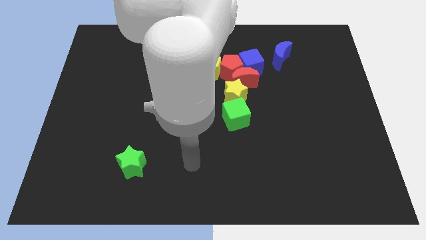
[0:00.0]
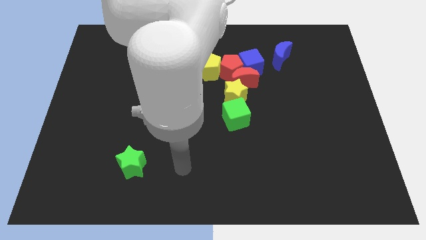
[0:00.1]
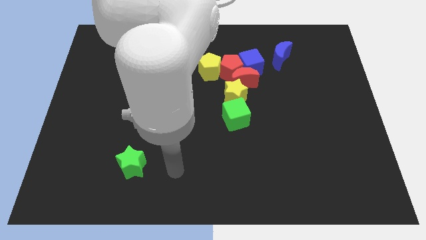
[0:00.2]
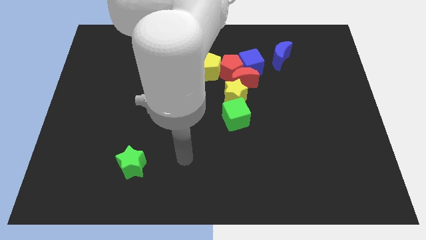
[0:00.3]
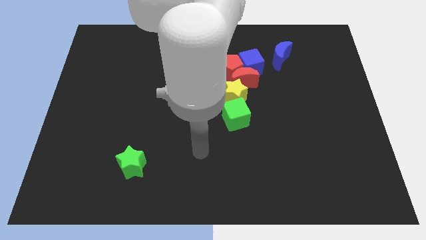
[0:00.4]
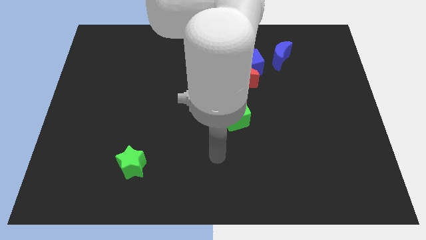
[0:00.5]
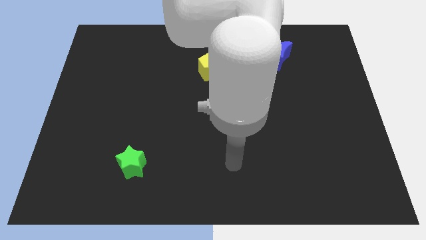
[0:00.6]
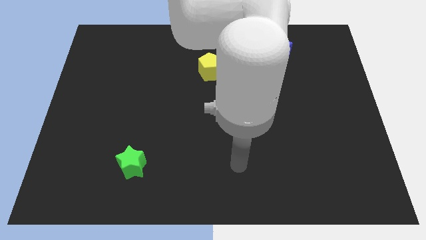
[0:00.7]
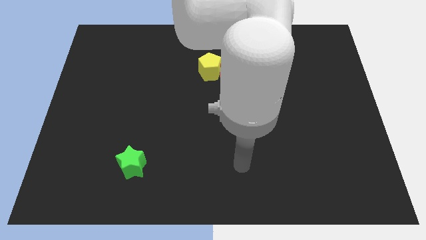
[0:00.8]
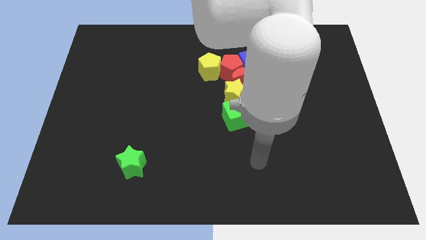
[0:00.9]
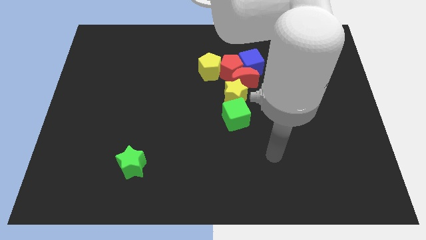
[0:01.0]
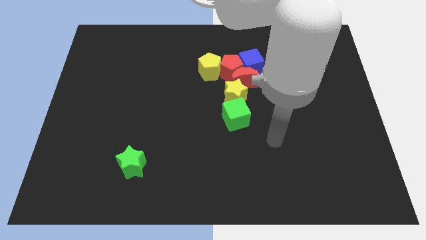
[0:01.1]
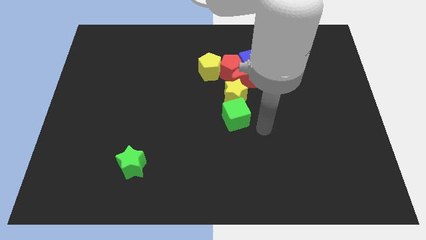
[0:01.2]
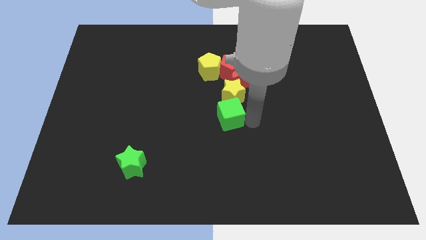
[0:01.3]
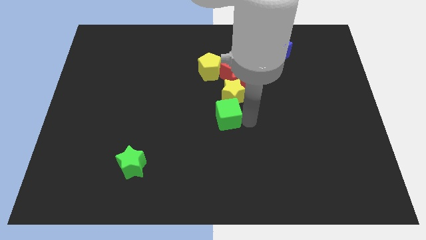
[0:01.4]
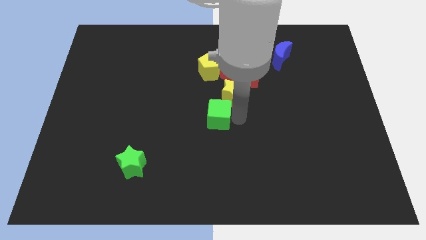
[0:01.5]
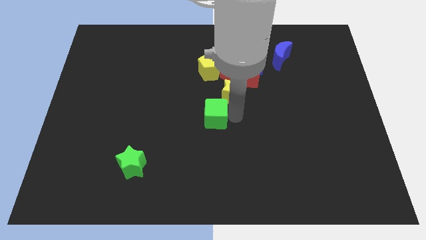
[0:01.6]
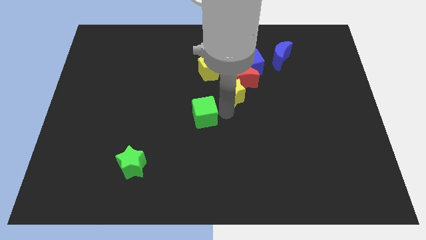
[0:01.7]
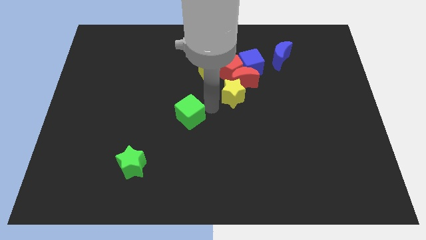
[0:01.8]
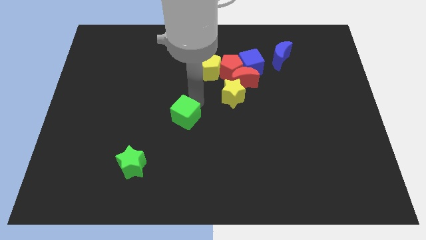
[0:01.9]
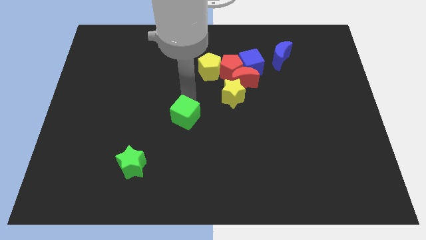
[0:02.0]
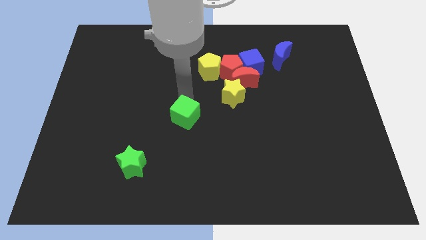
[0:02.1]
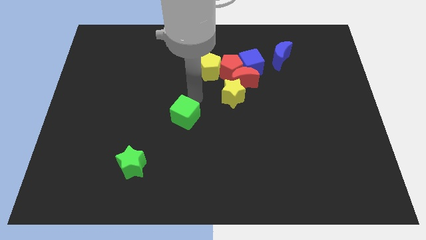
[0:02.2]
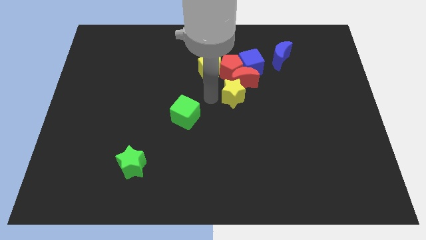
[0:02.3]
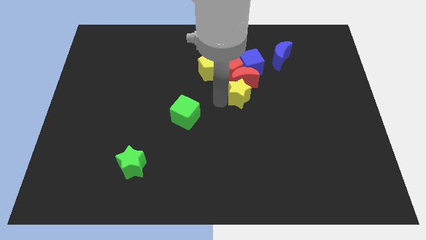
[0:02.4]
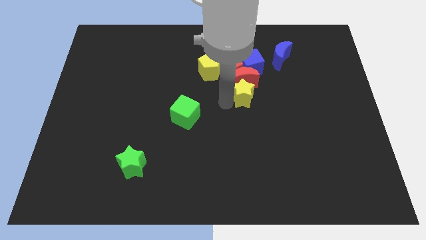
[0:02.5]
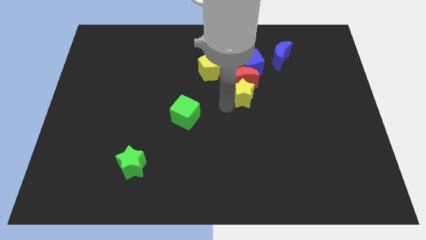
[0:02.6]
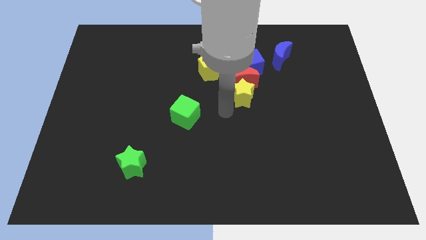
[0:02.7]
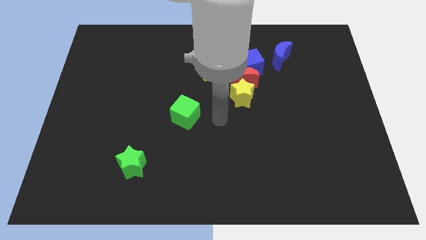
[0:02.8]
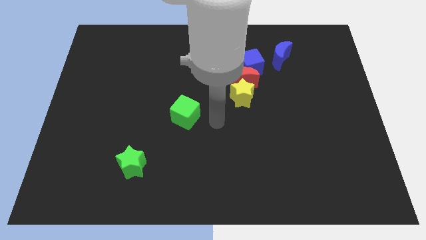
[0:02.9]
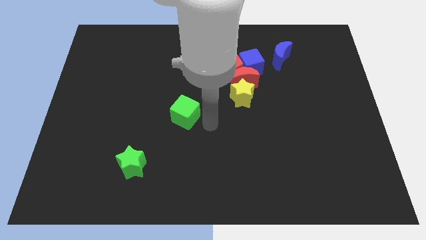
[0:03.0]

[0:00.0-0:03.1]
separate green cube from yellow star

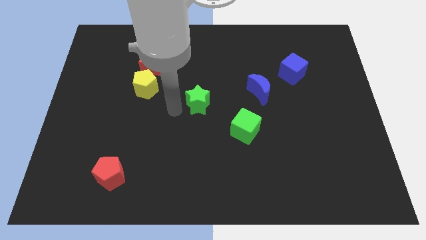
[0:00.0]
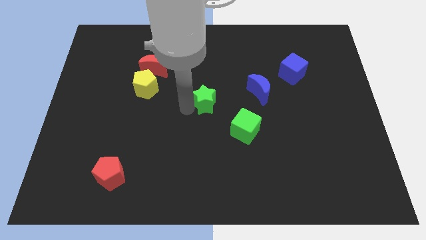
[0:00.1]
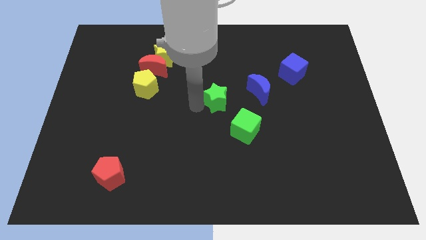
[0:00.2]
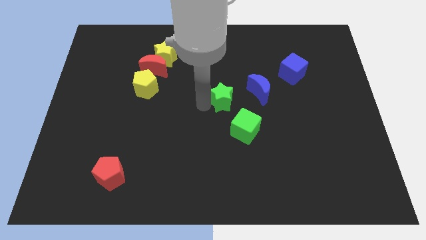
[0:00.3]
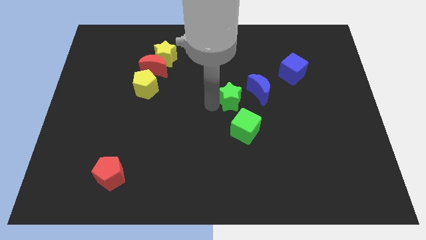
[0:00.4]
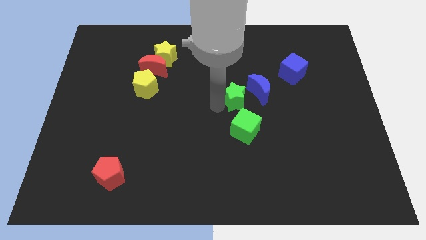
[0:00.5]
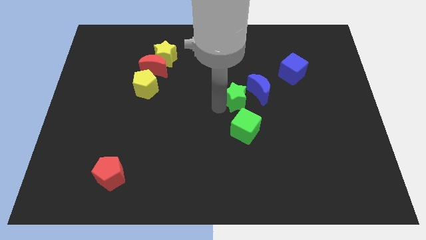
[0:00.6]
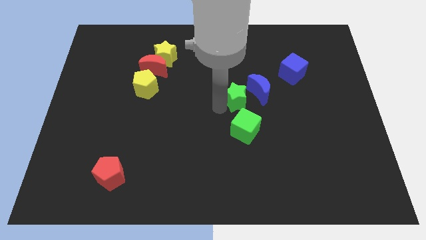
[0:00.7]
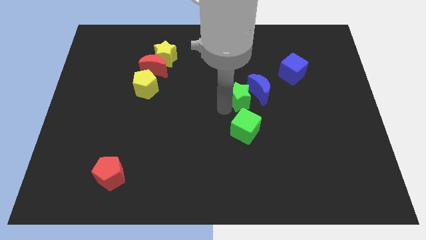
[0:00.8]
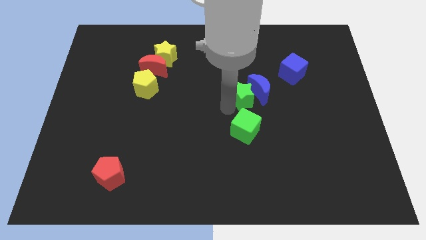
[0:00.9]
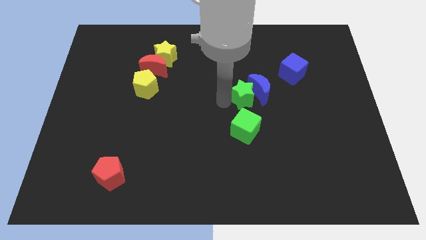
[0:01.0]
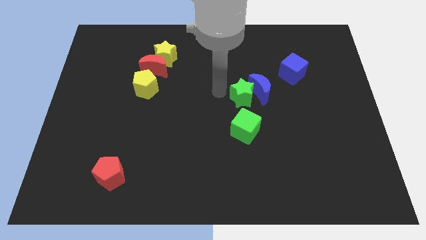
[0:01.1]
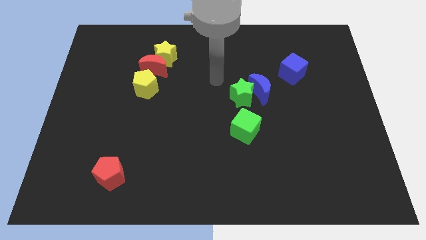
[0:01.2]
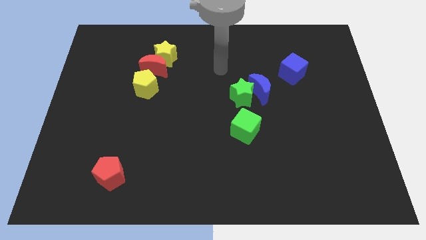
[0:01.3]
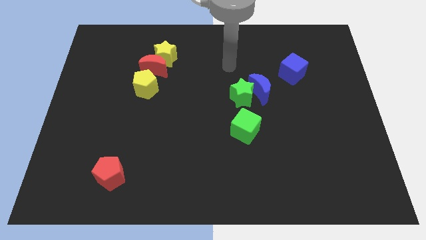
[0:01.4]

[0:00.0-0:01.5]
move the green star to the left side of the blue crescent

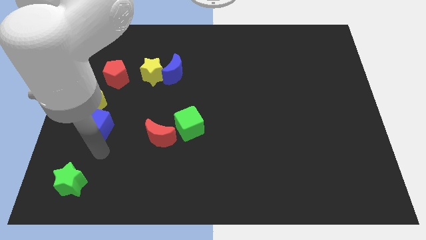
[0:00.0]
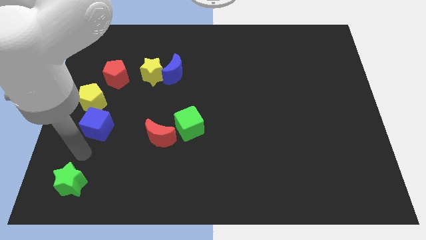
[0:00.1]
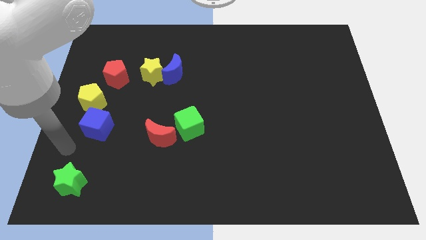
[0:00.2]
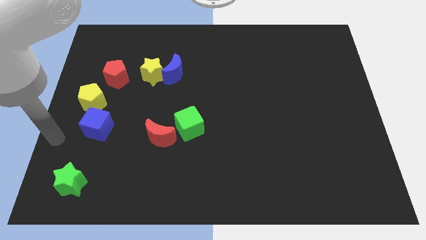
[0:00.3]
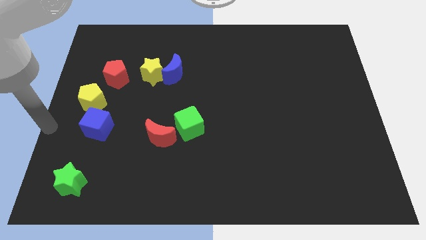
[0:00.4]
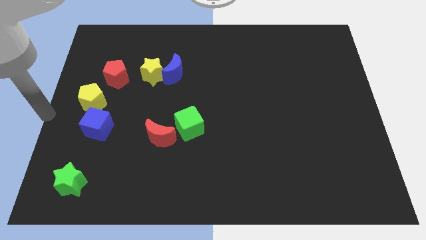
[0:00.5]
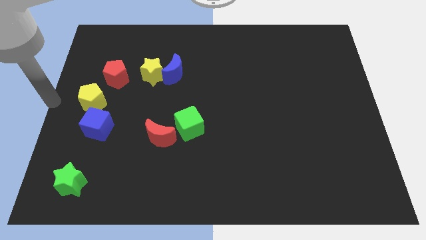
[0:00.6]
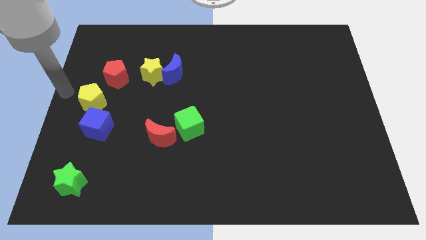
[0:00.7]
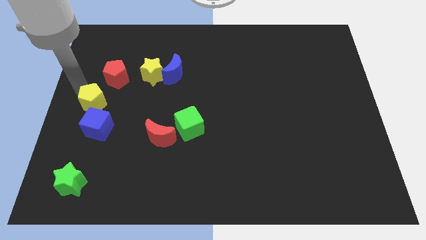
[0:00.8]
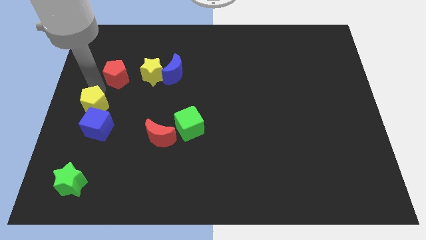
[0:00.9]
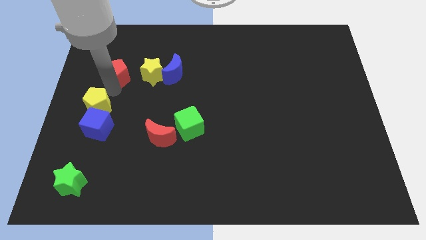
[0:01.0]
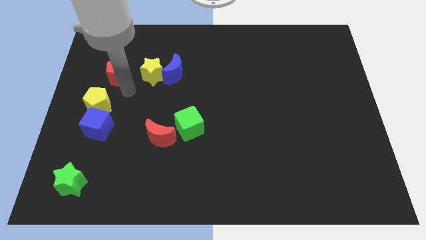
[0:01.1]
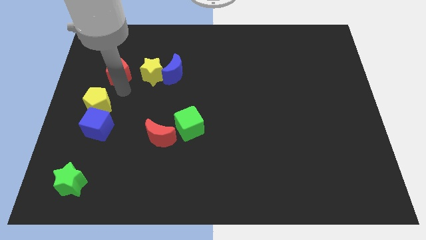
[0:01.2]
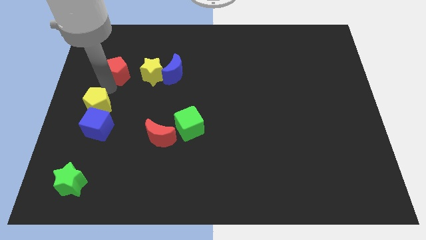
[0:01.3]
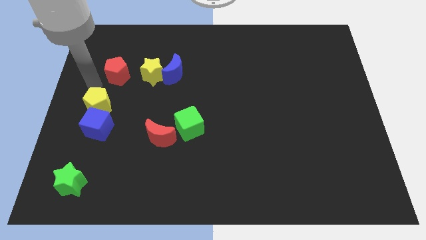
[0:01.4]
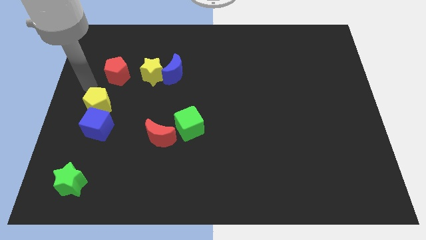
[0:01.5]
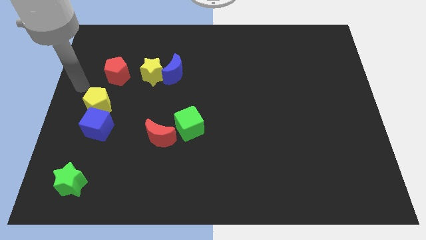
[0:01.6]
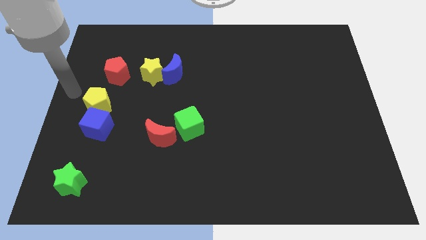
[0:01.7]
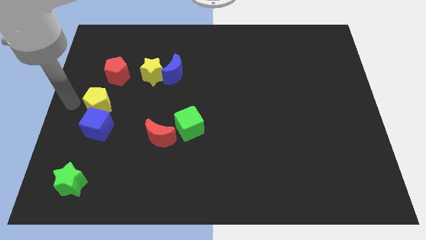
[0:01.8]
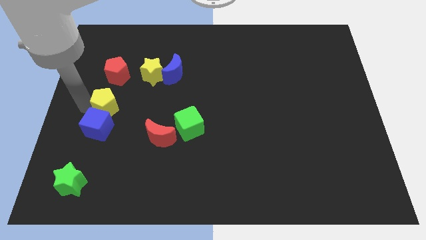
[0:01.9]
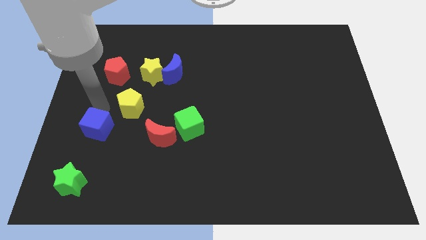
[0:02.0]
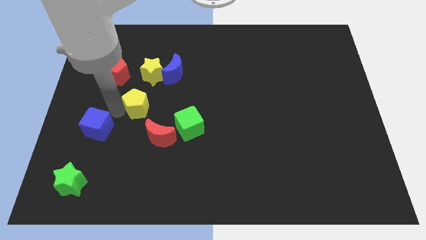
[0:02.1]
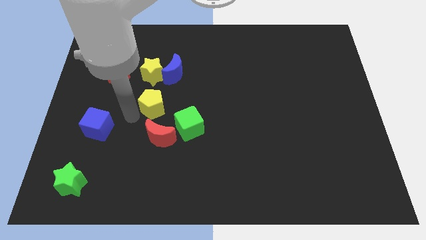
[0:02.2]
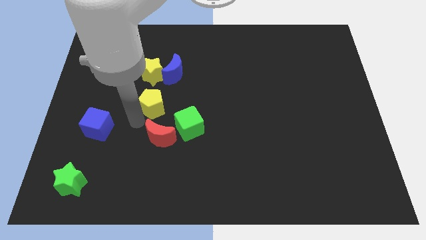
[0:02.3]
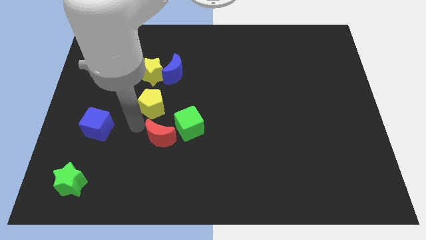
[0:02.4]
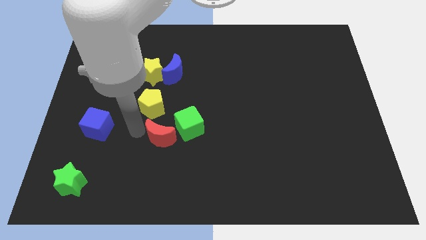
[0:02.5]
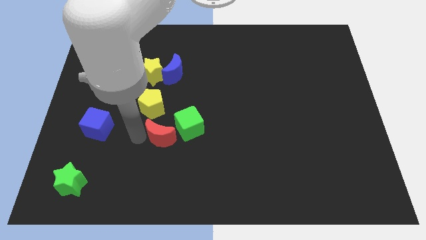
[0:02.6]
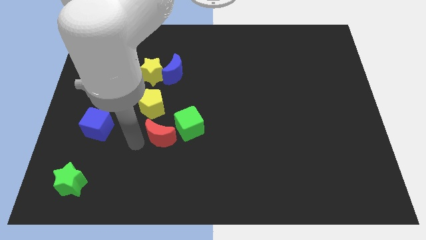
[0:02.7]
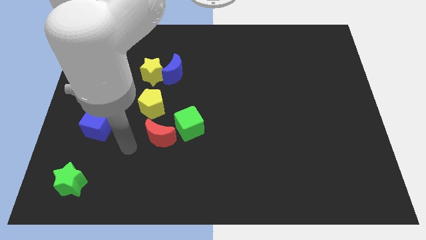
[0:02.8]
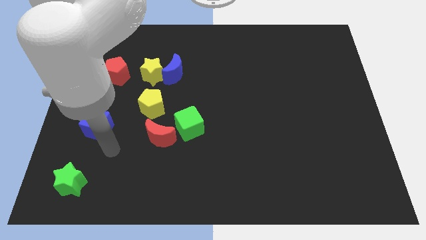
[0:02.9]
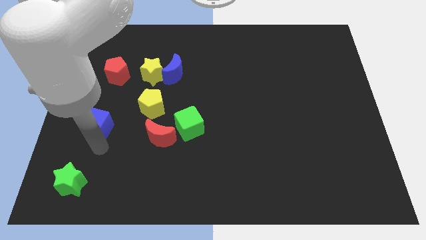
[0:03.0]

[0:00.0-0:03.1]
push the yellow pentagon above the red crescent

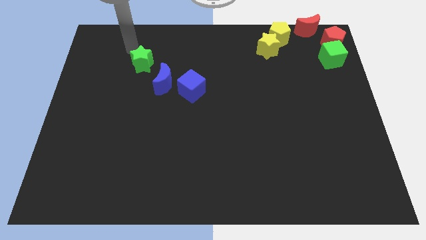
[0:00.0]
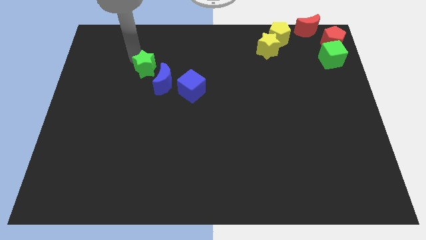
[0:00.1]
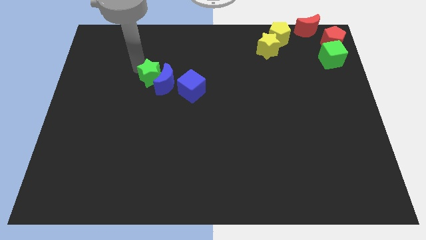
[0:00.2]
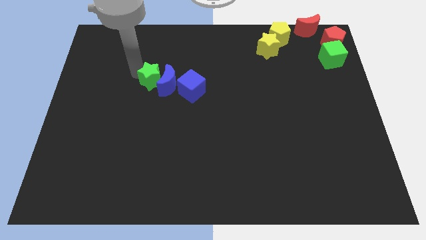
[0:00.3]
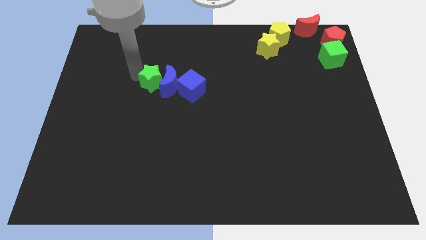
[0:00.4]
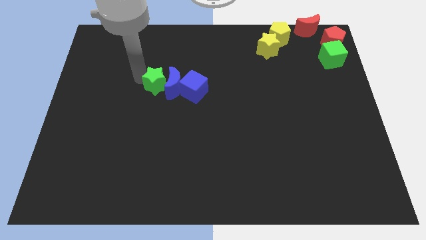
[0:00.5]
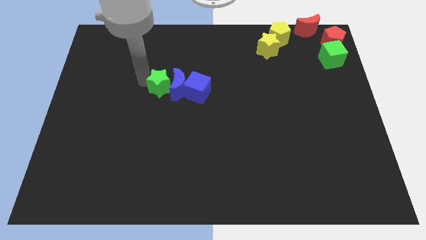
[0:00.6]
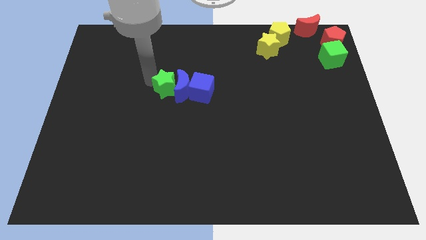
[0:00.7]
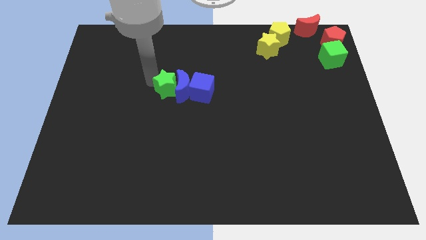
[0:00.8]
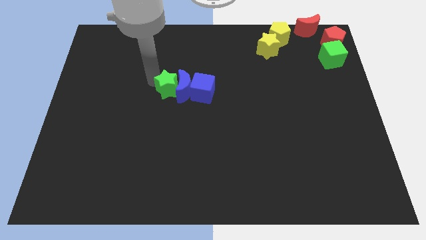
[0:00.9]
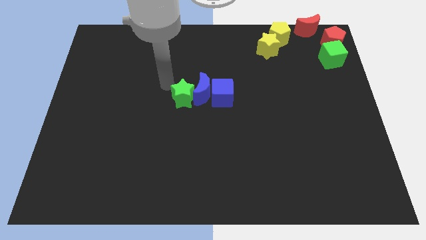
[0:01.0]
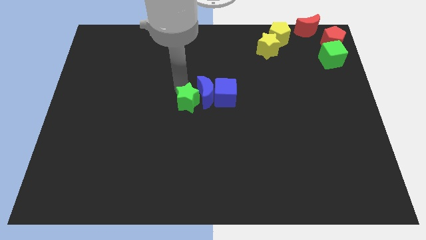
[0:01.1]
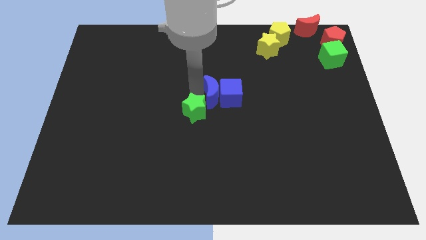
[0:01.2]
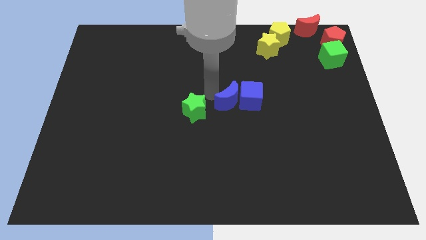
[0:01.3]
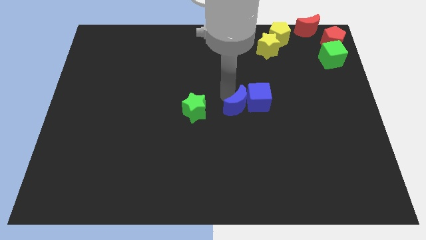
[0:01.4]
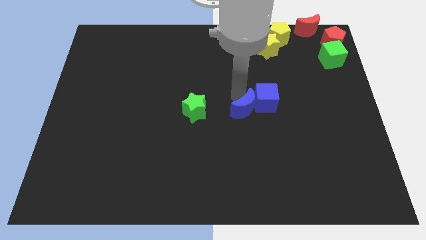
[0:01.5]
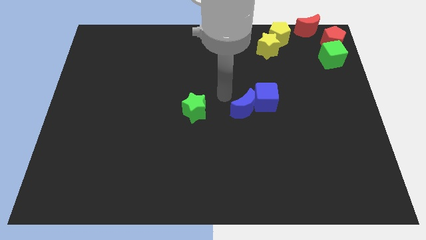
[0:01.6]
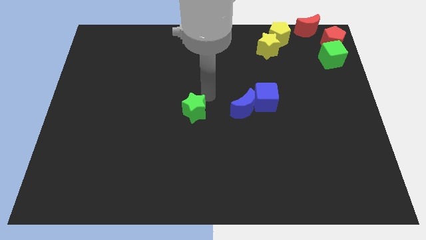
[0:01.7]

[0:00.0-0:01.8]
separate the green star and blue blocks
